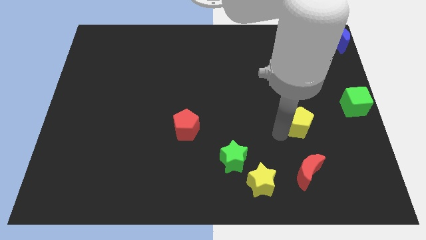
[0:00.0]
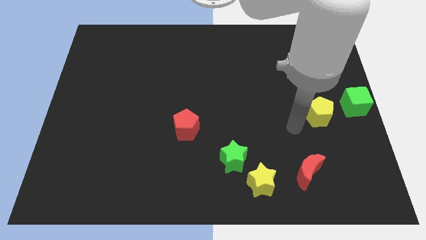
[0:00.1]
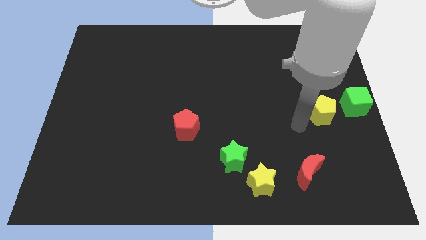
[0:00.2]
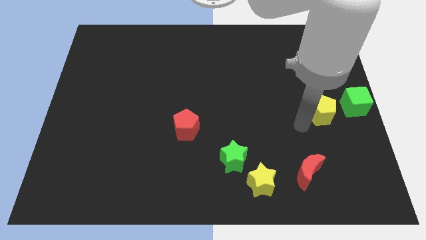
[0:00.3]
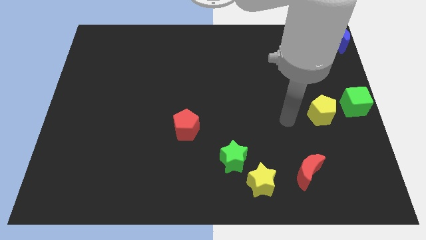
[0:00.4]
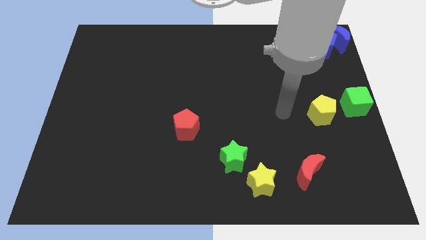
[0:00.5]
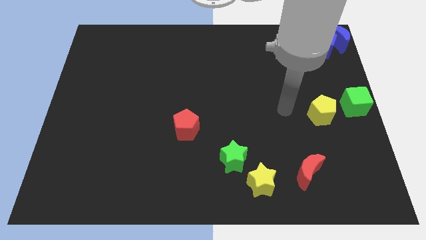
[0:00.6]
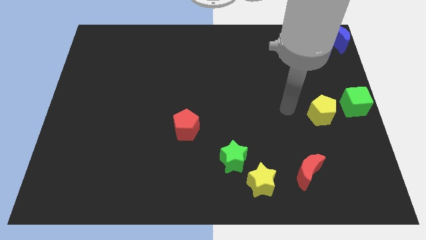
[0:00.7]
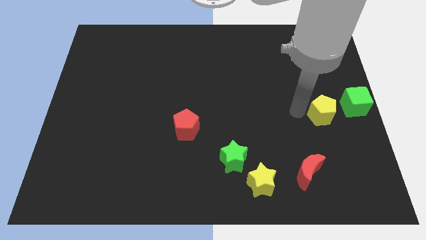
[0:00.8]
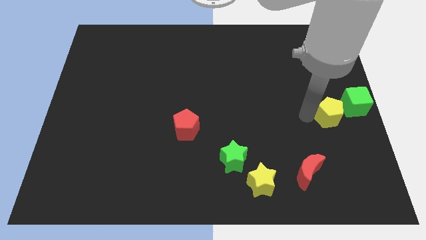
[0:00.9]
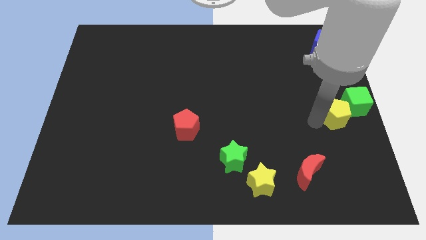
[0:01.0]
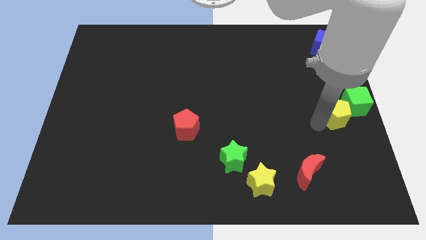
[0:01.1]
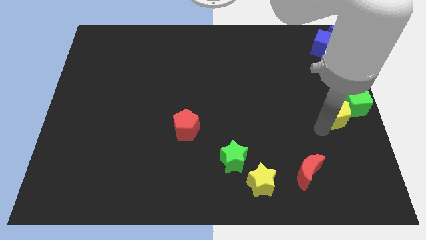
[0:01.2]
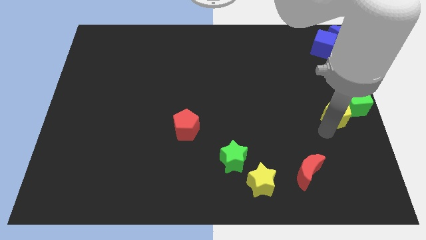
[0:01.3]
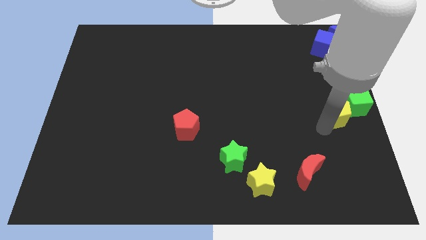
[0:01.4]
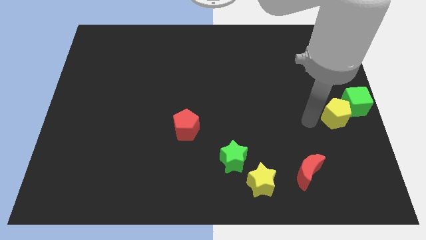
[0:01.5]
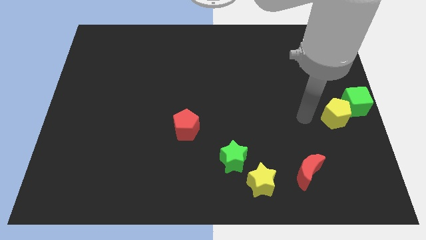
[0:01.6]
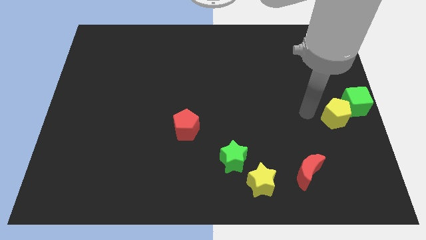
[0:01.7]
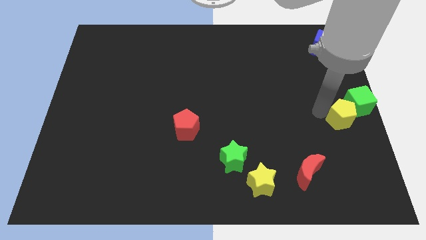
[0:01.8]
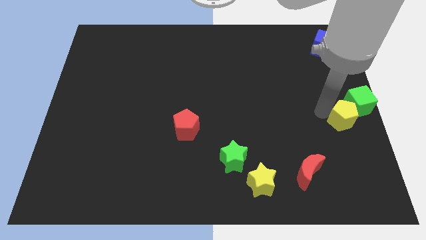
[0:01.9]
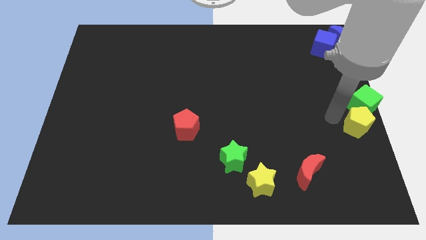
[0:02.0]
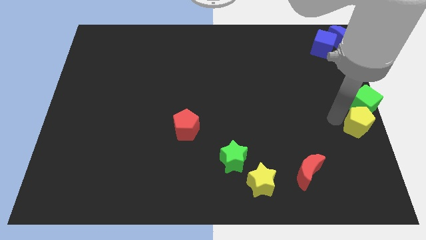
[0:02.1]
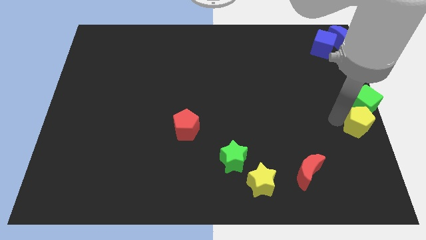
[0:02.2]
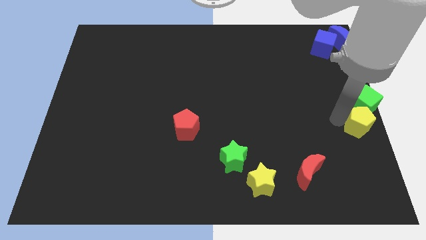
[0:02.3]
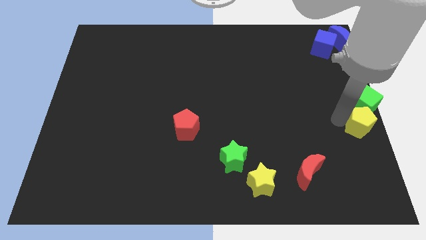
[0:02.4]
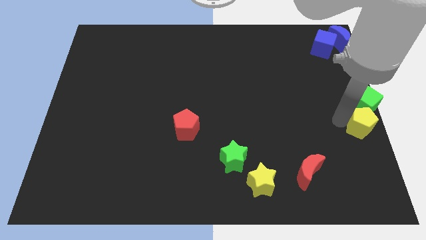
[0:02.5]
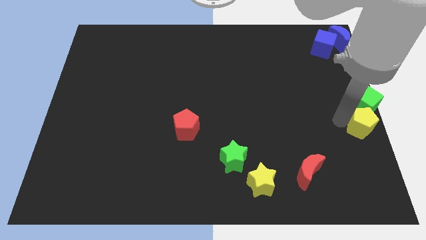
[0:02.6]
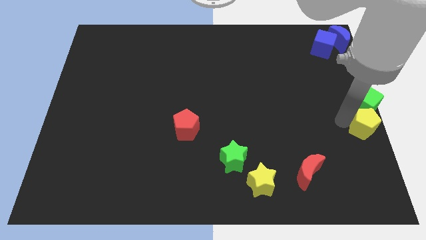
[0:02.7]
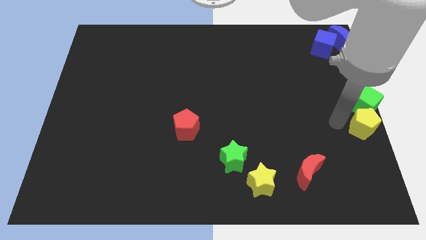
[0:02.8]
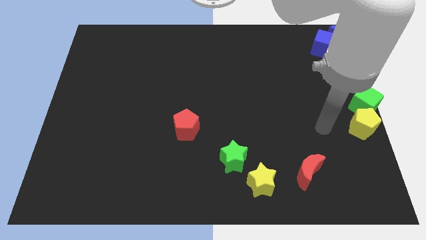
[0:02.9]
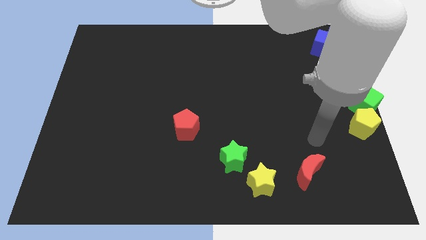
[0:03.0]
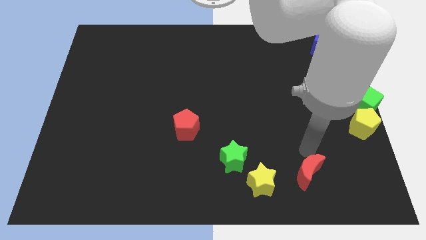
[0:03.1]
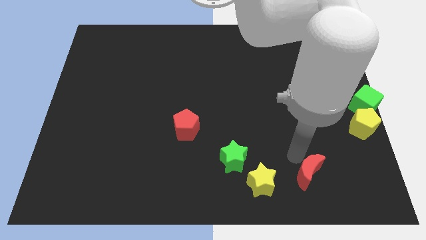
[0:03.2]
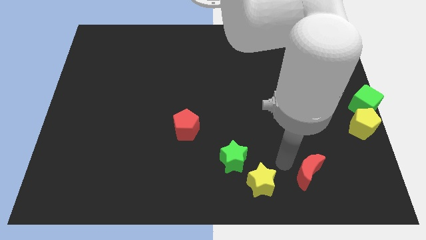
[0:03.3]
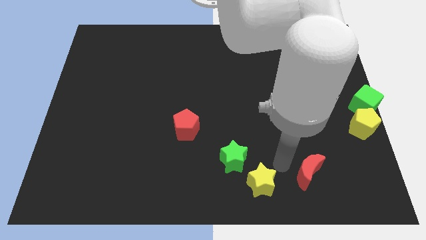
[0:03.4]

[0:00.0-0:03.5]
slide the yellow pentagon at the bottom side of the green cube

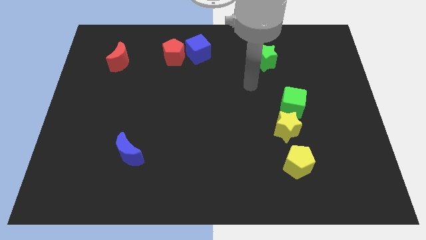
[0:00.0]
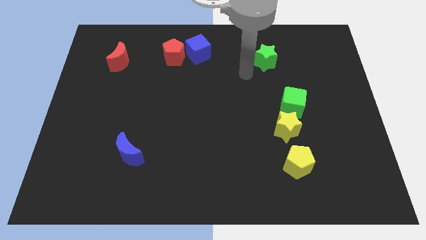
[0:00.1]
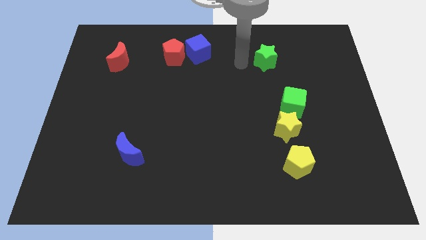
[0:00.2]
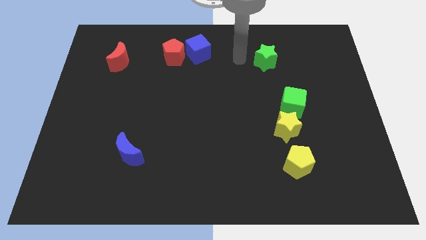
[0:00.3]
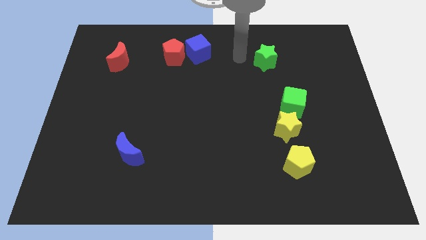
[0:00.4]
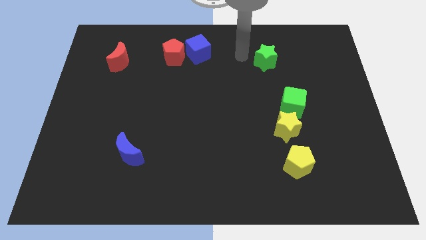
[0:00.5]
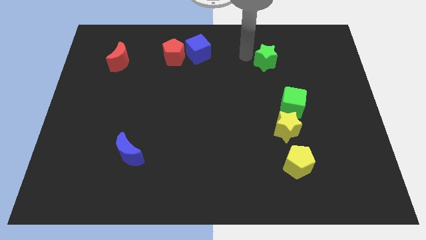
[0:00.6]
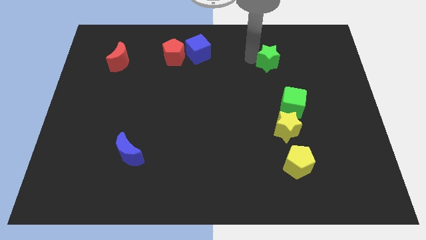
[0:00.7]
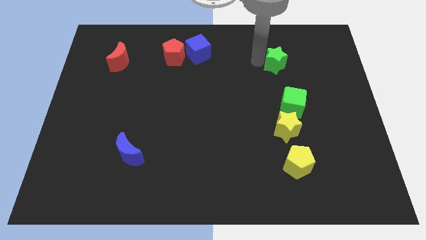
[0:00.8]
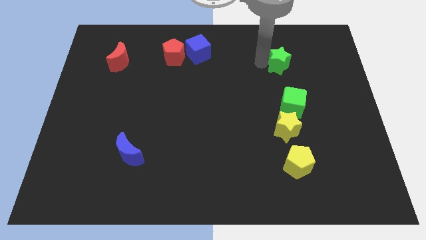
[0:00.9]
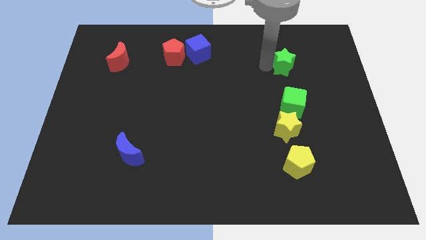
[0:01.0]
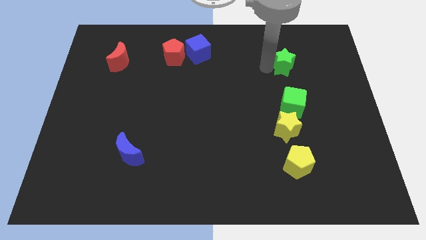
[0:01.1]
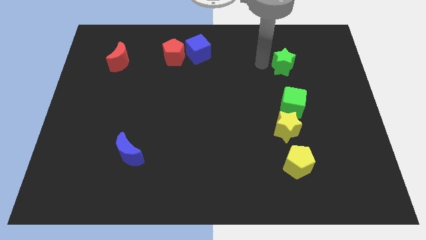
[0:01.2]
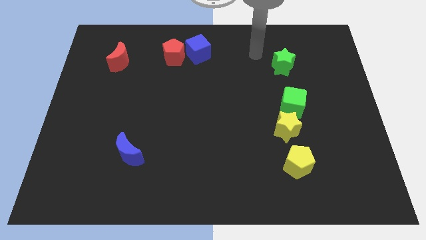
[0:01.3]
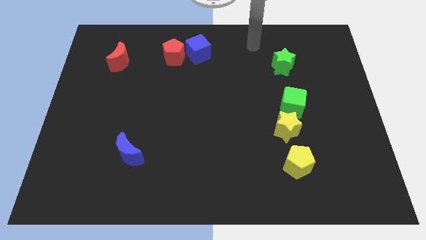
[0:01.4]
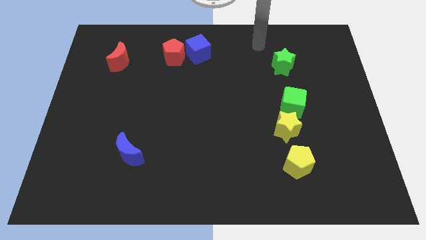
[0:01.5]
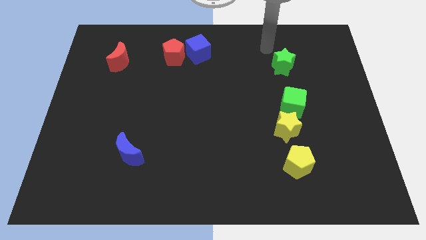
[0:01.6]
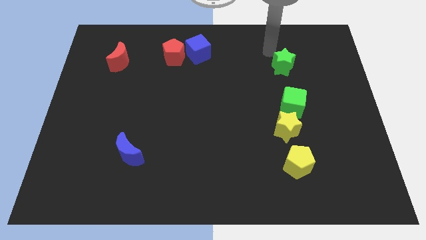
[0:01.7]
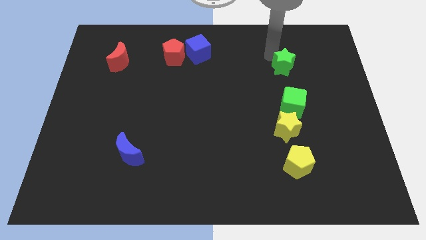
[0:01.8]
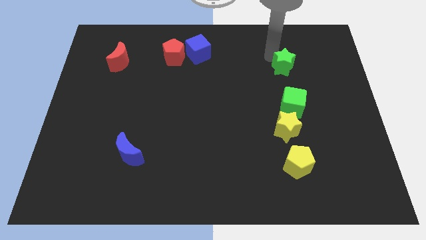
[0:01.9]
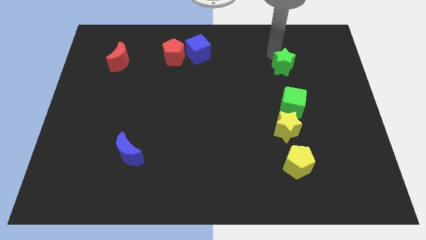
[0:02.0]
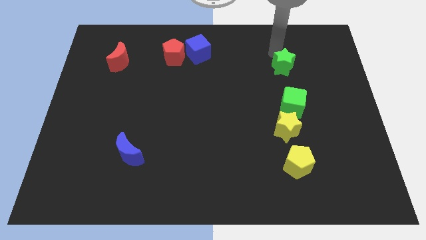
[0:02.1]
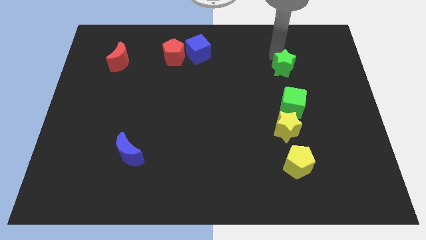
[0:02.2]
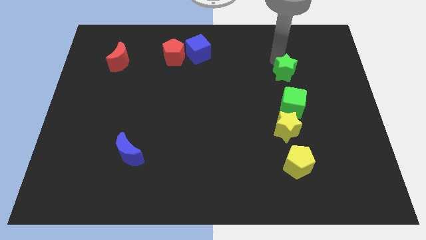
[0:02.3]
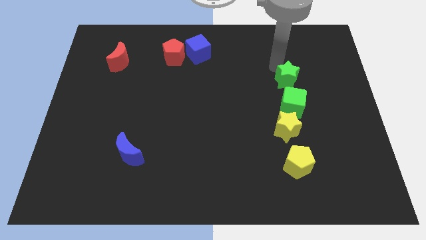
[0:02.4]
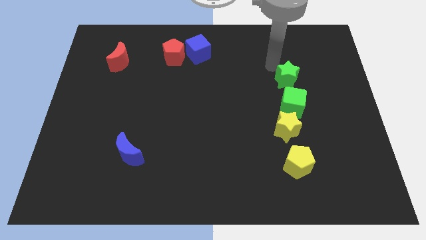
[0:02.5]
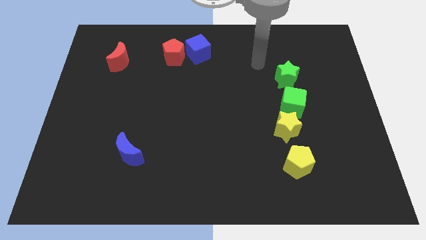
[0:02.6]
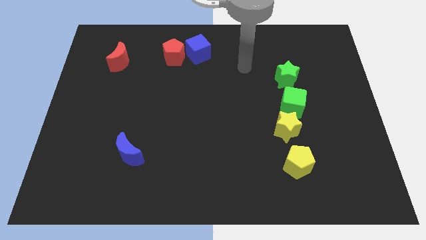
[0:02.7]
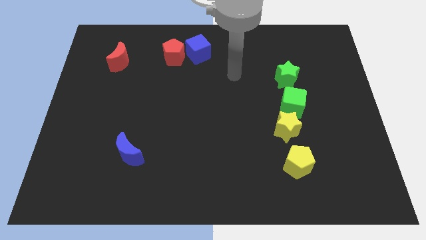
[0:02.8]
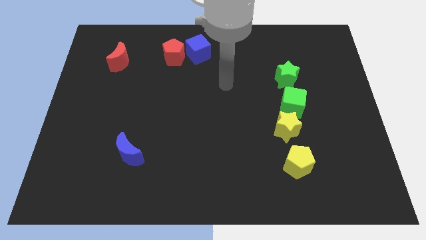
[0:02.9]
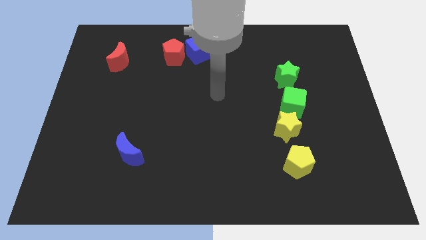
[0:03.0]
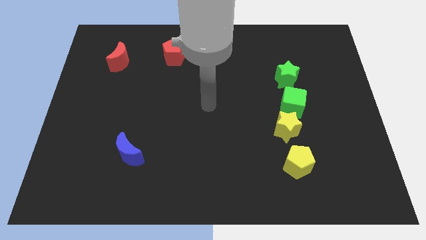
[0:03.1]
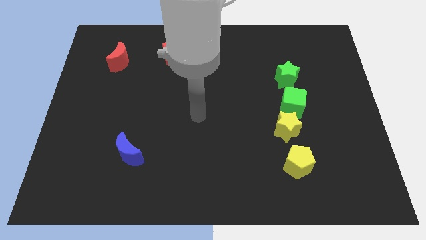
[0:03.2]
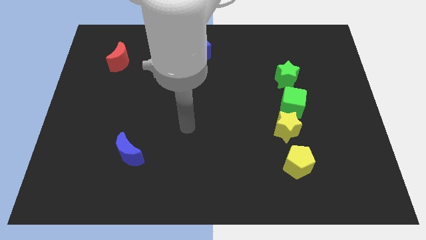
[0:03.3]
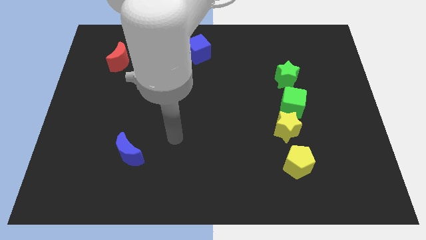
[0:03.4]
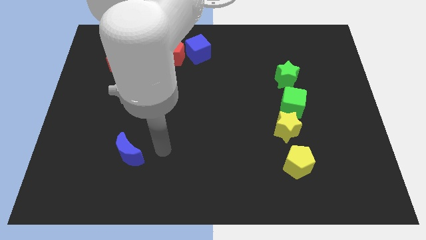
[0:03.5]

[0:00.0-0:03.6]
place the green star at the top of green cube

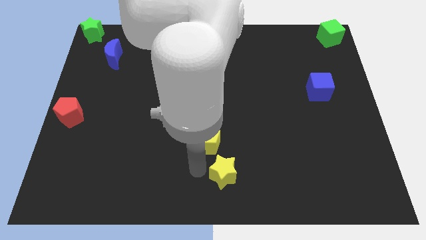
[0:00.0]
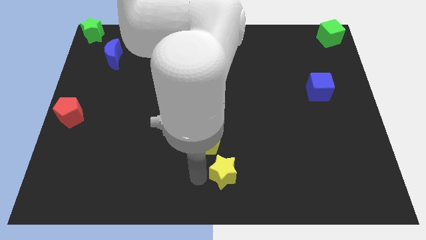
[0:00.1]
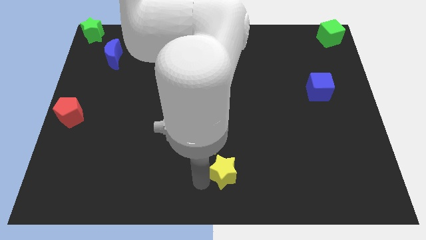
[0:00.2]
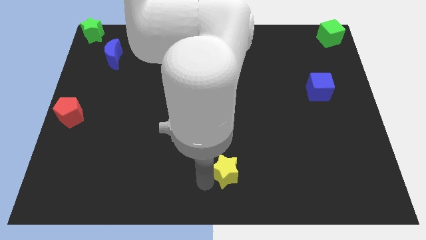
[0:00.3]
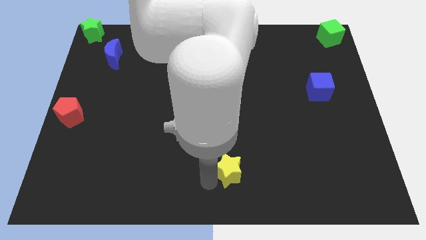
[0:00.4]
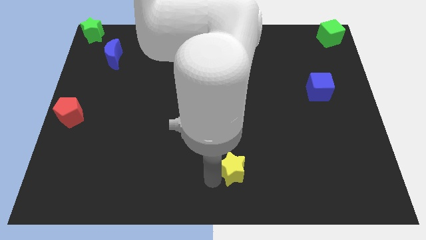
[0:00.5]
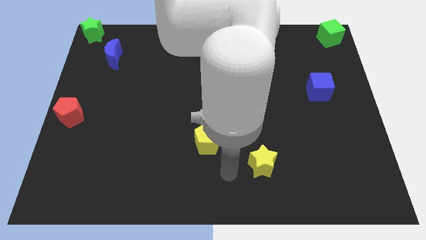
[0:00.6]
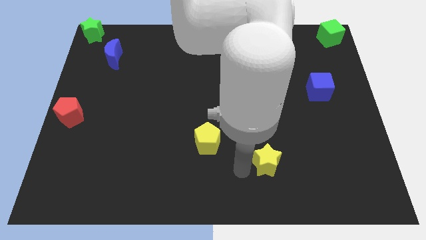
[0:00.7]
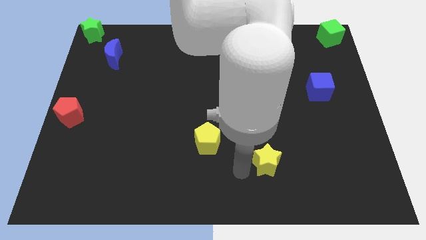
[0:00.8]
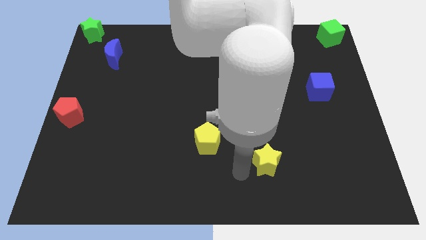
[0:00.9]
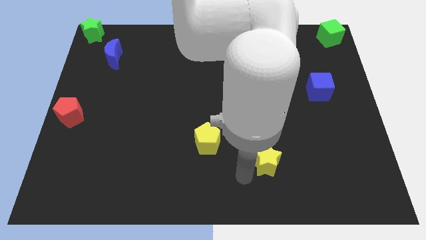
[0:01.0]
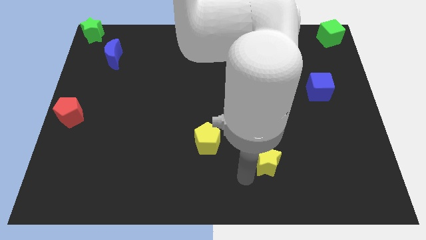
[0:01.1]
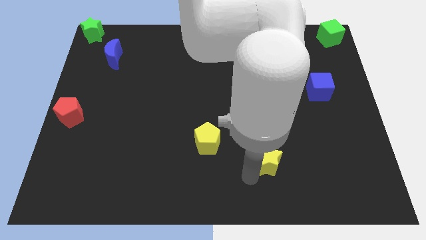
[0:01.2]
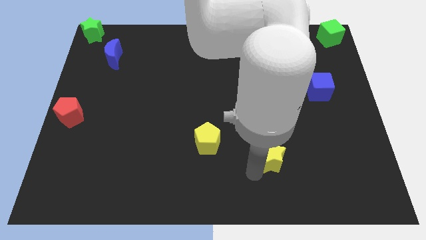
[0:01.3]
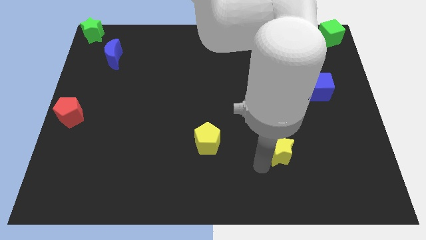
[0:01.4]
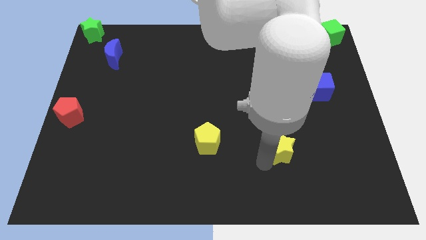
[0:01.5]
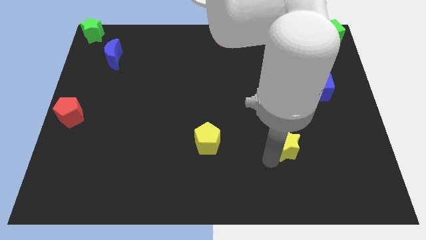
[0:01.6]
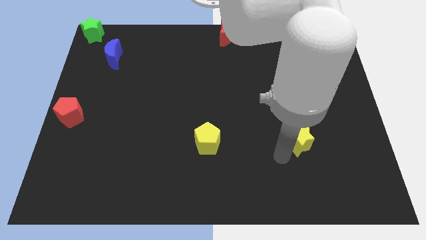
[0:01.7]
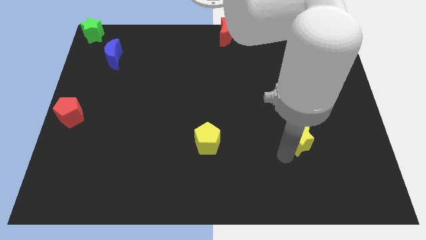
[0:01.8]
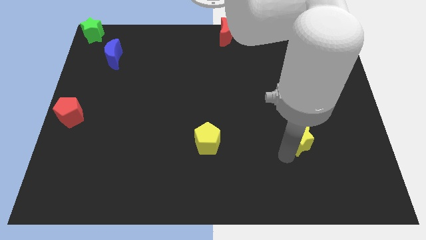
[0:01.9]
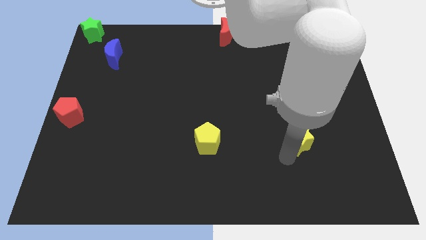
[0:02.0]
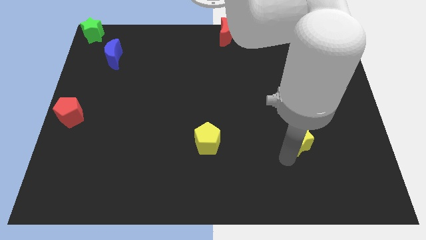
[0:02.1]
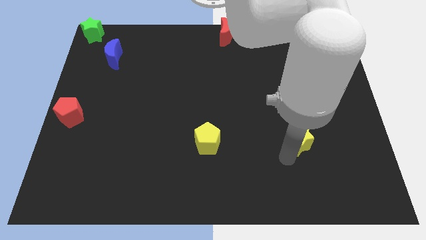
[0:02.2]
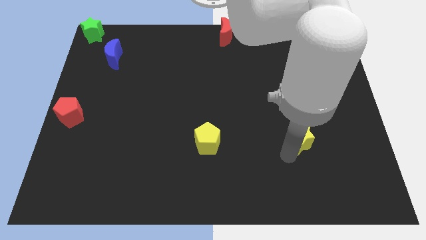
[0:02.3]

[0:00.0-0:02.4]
move the yellow star to the right of the yellow pentagon
